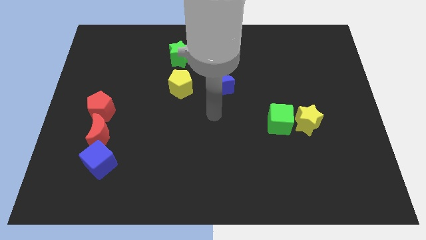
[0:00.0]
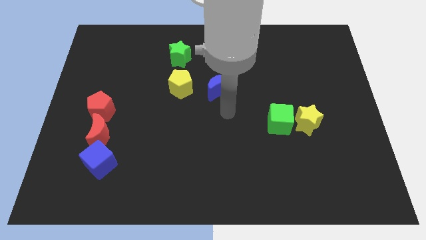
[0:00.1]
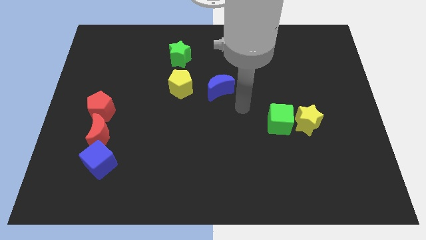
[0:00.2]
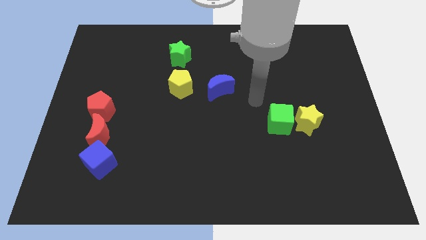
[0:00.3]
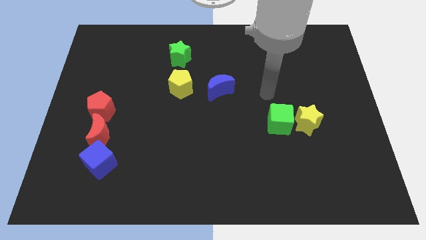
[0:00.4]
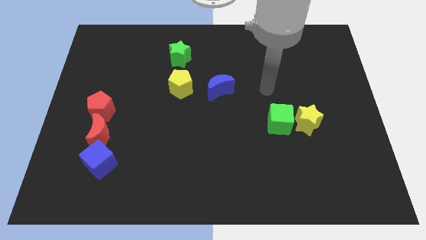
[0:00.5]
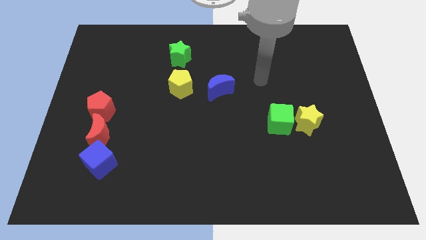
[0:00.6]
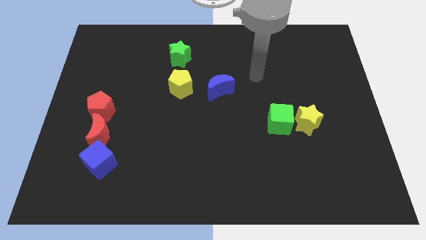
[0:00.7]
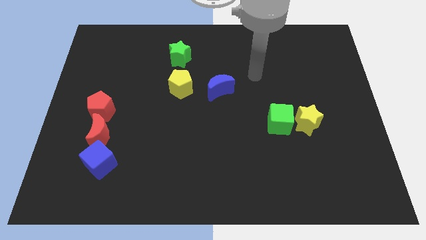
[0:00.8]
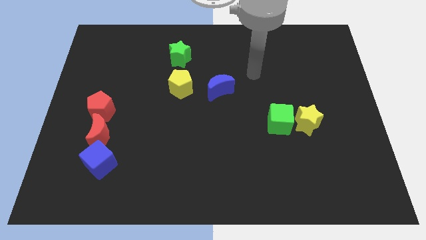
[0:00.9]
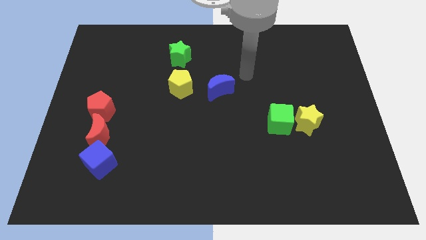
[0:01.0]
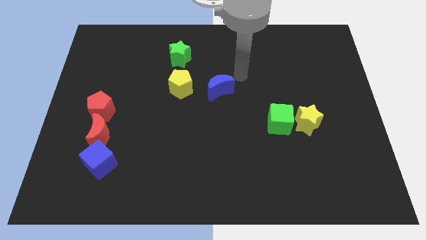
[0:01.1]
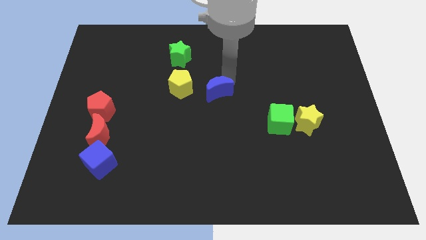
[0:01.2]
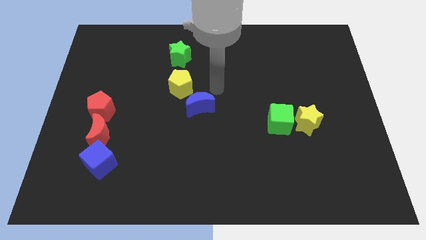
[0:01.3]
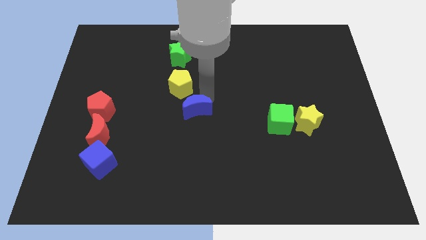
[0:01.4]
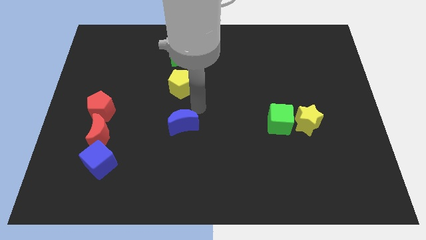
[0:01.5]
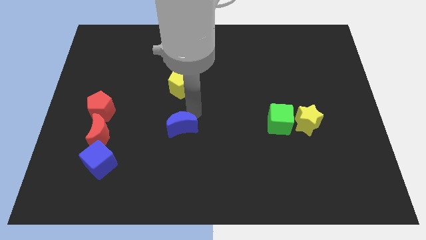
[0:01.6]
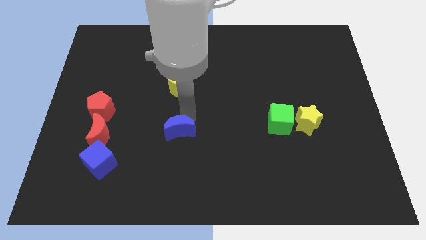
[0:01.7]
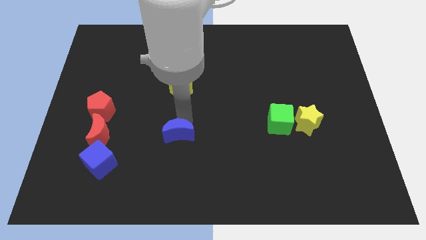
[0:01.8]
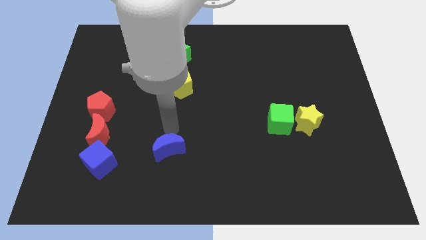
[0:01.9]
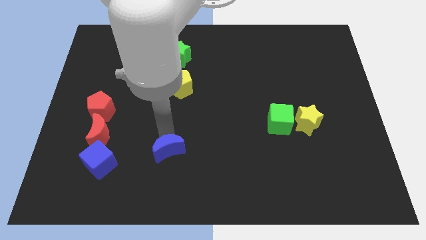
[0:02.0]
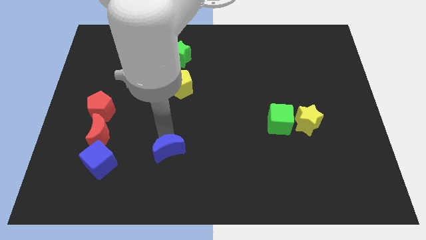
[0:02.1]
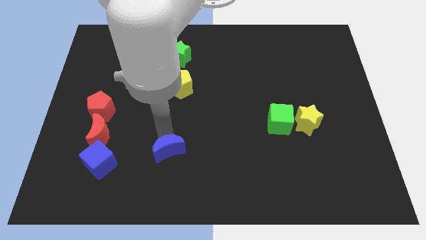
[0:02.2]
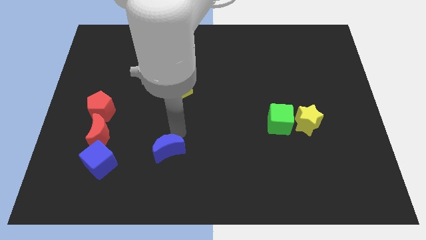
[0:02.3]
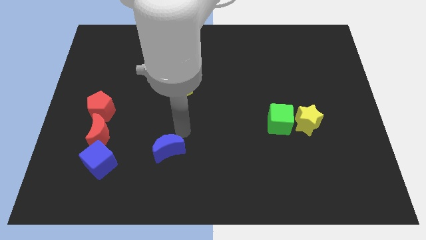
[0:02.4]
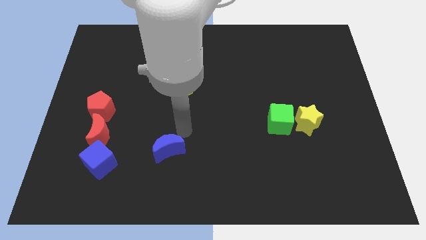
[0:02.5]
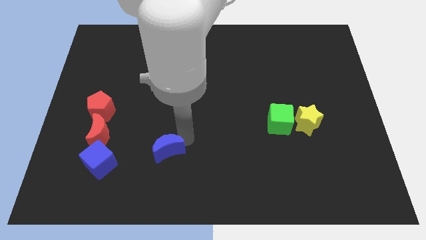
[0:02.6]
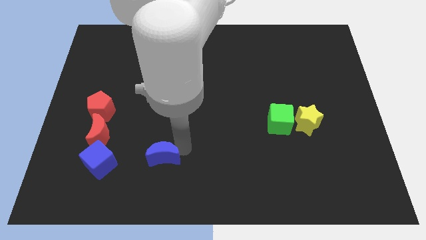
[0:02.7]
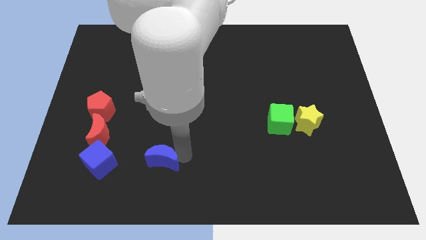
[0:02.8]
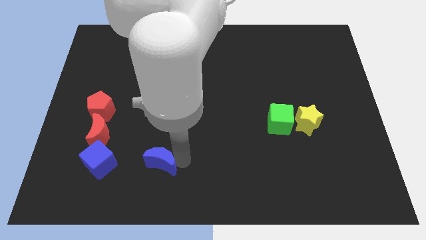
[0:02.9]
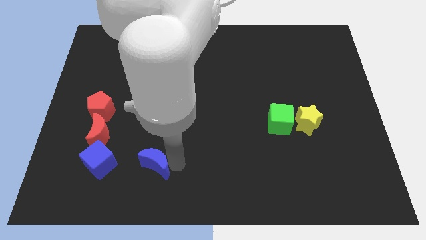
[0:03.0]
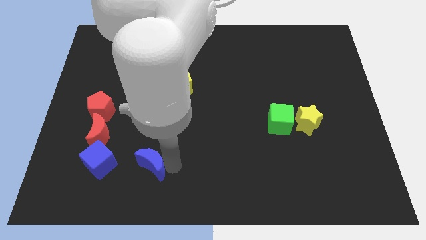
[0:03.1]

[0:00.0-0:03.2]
place the blue crescent parallel to the blue cube

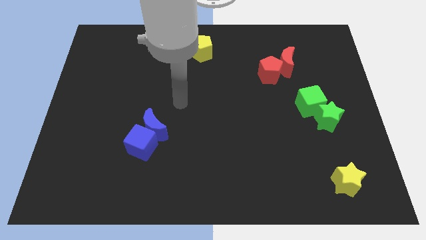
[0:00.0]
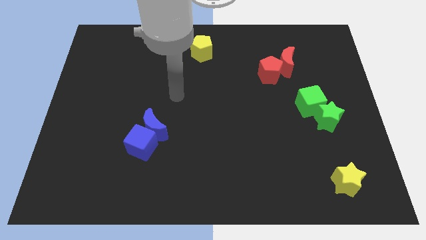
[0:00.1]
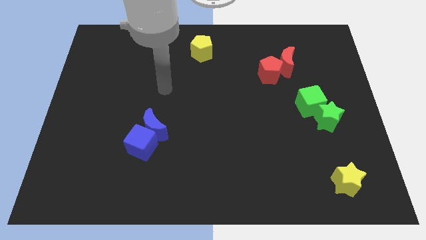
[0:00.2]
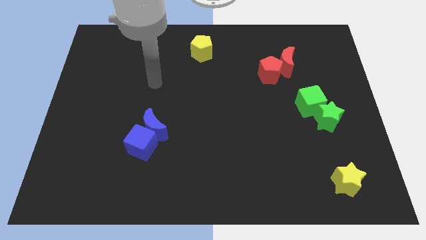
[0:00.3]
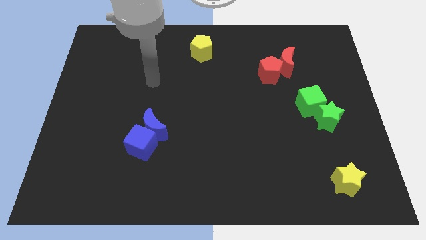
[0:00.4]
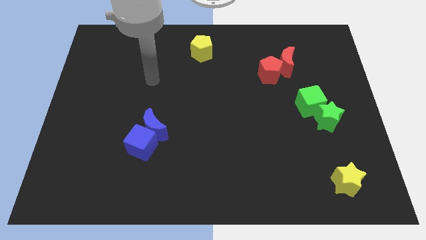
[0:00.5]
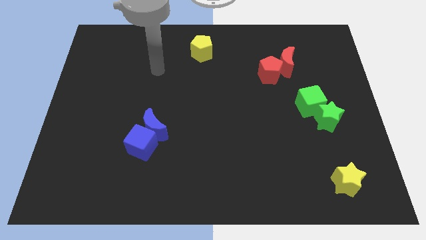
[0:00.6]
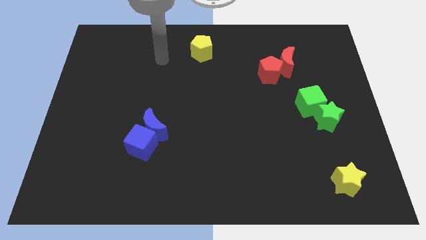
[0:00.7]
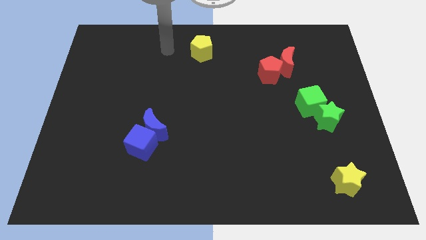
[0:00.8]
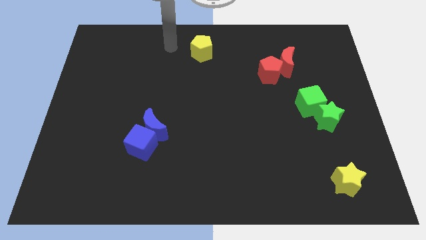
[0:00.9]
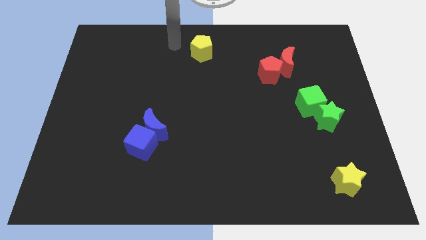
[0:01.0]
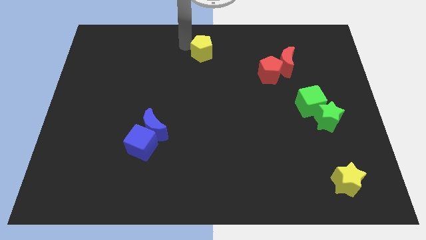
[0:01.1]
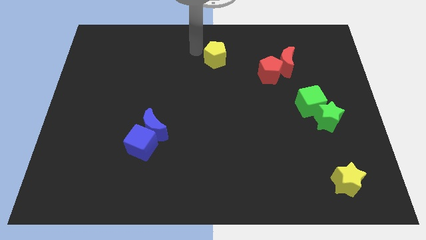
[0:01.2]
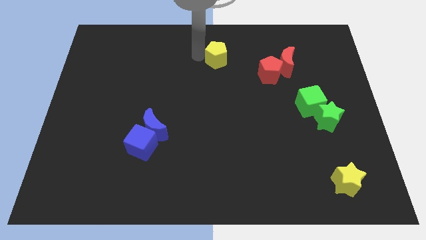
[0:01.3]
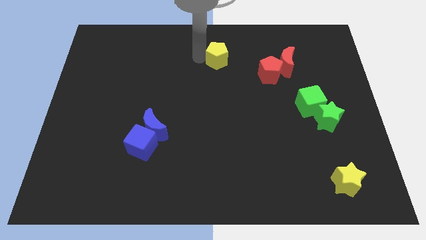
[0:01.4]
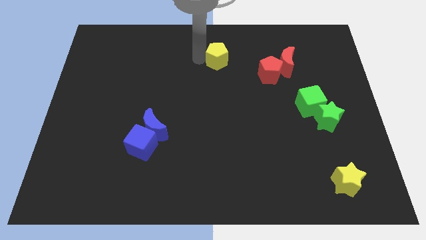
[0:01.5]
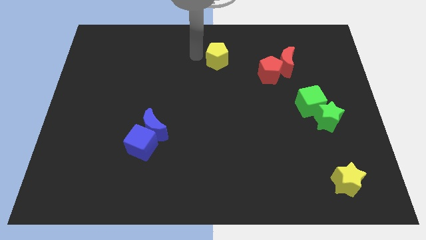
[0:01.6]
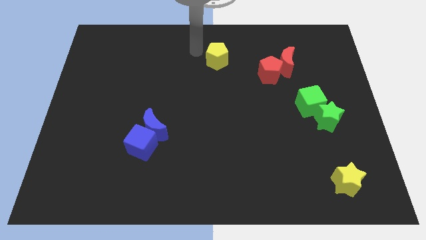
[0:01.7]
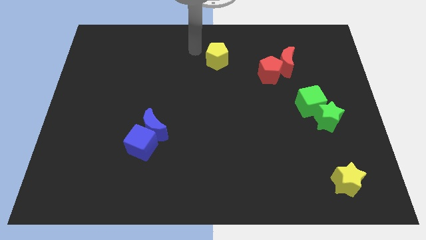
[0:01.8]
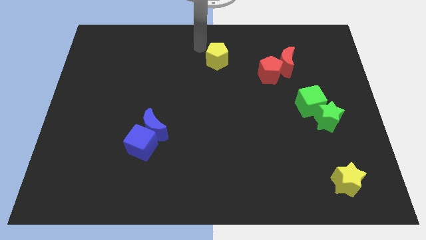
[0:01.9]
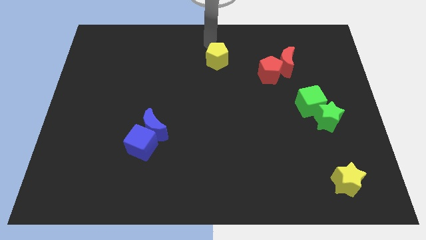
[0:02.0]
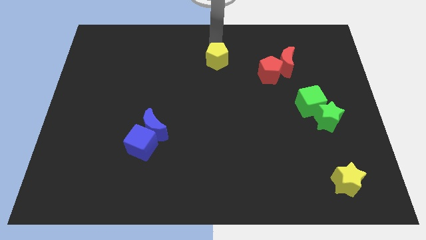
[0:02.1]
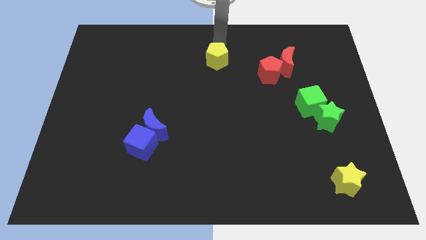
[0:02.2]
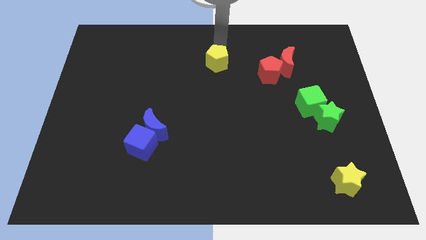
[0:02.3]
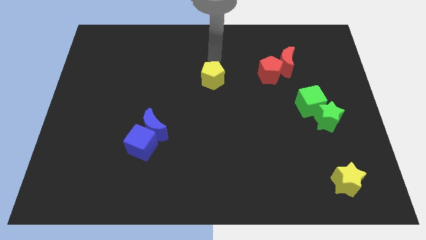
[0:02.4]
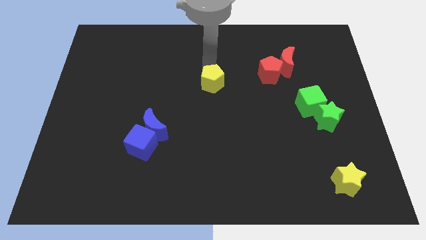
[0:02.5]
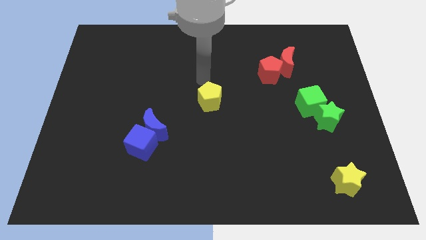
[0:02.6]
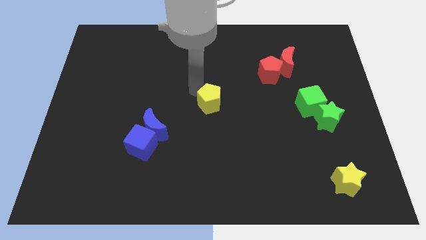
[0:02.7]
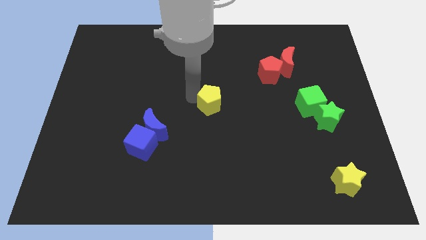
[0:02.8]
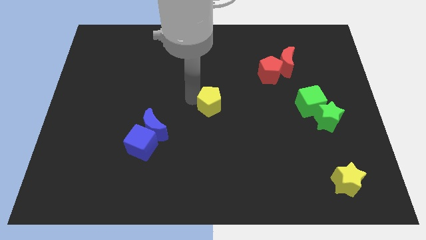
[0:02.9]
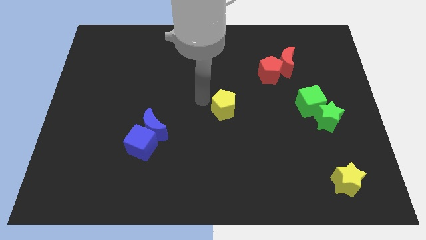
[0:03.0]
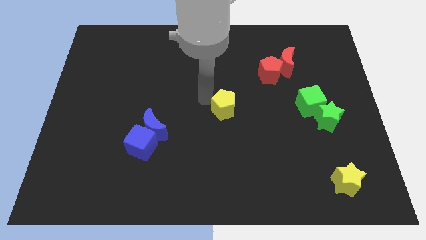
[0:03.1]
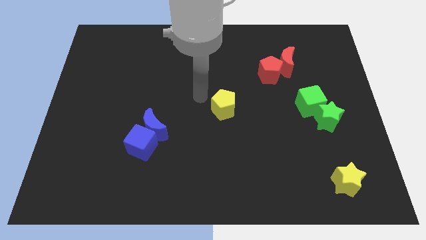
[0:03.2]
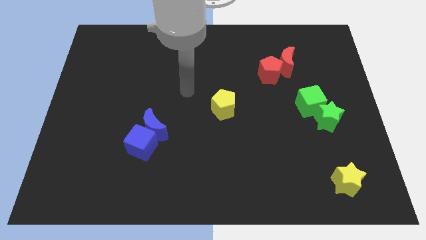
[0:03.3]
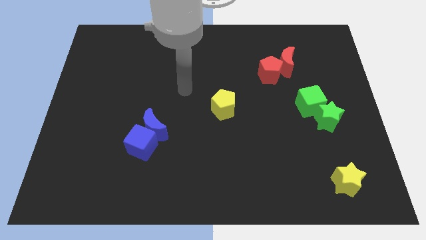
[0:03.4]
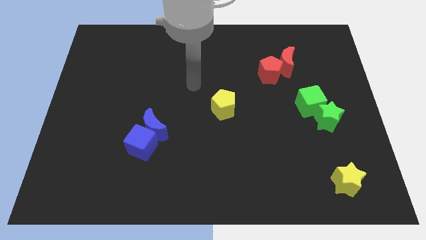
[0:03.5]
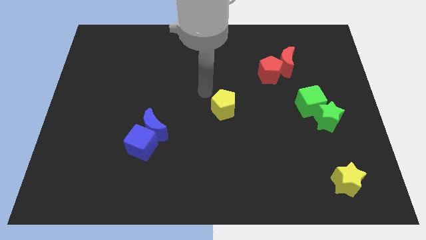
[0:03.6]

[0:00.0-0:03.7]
move the yellow pentagon to the center of the board

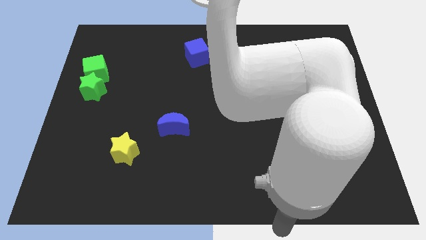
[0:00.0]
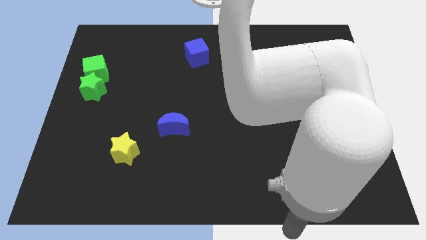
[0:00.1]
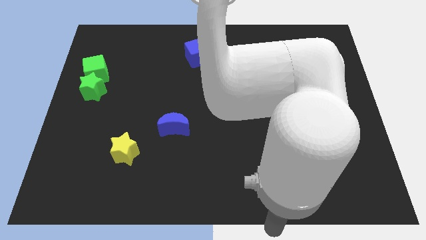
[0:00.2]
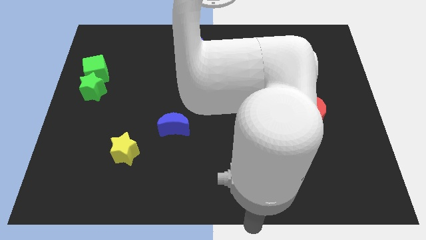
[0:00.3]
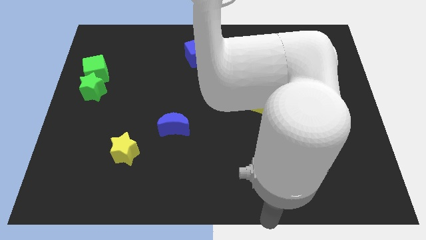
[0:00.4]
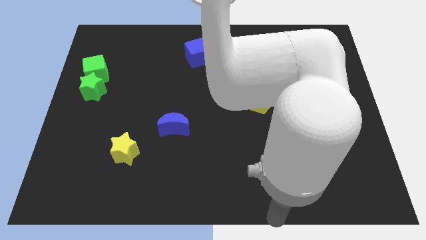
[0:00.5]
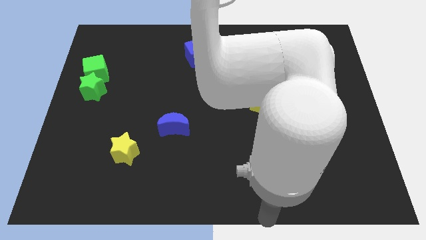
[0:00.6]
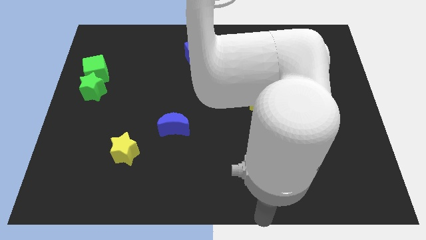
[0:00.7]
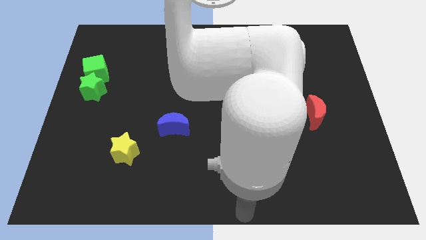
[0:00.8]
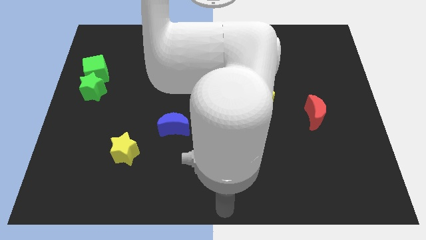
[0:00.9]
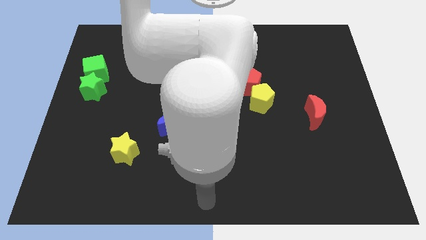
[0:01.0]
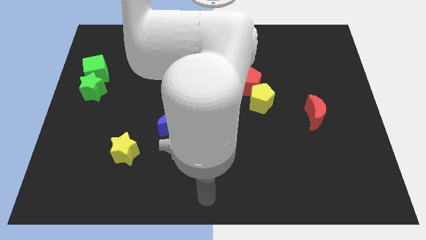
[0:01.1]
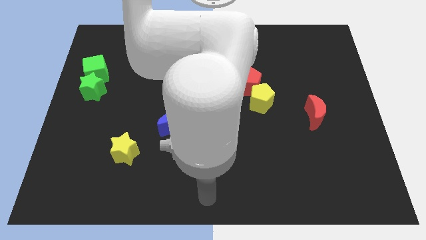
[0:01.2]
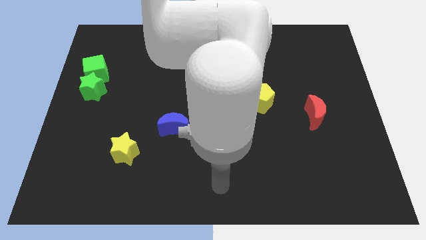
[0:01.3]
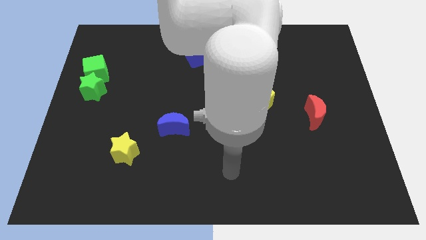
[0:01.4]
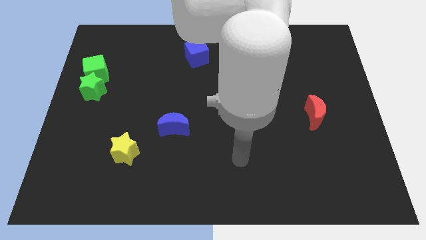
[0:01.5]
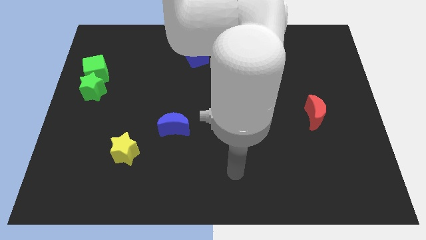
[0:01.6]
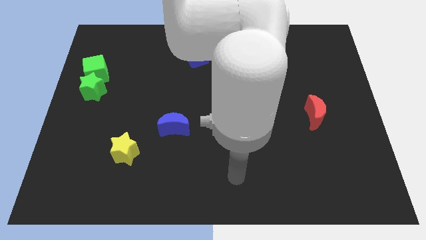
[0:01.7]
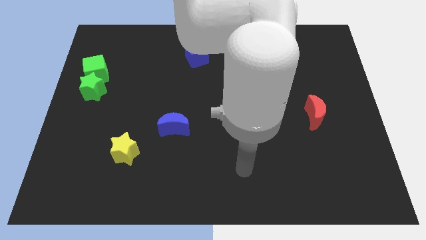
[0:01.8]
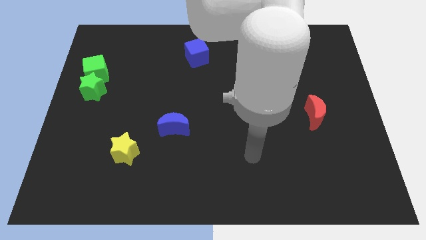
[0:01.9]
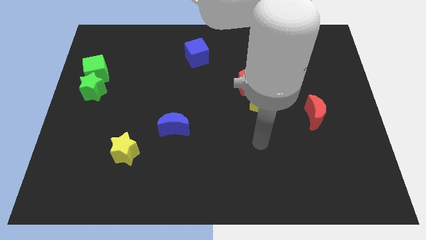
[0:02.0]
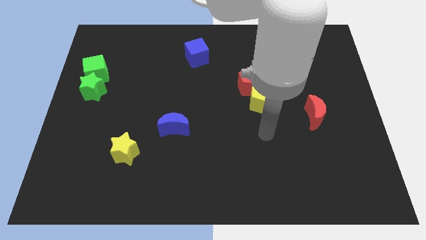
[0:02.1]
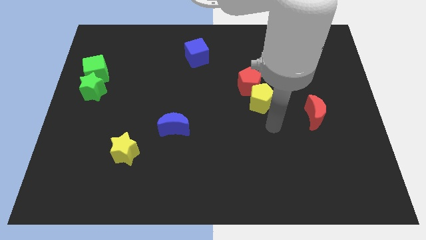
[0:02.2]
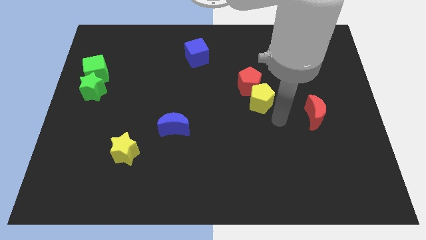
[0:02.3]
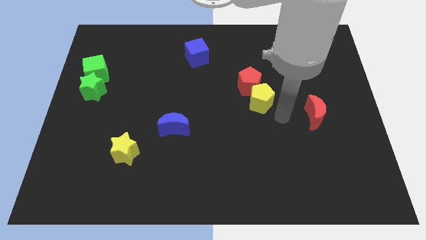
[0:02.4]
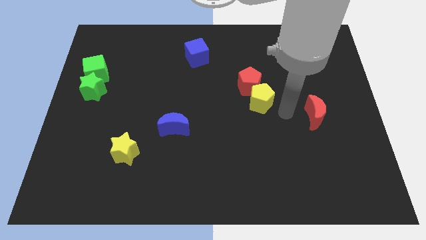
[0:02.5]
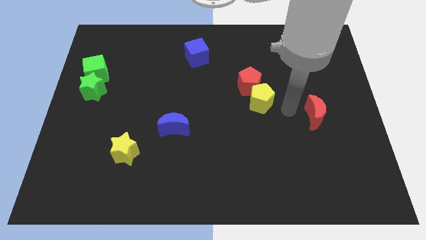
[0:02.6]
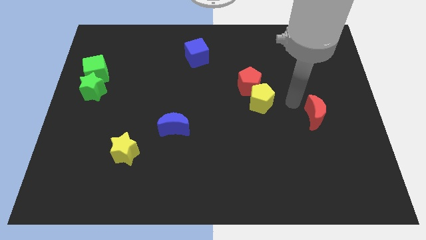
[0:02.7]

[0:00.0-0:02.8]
place your hand at the right of the yellow pentagon
